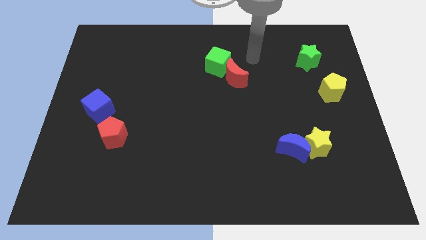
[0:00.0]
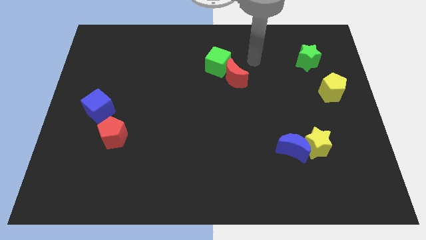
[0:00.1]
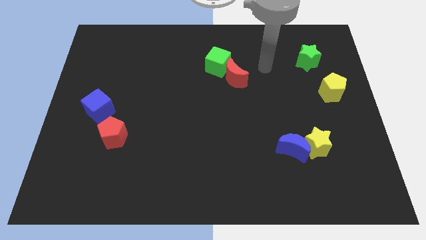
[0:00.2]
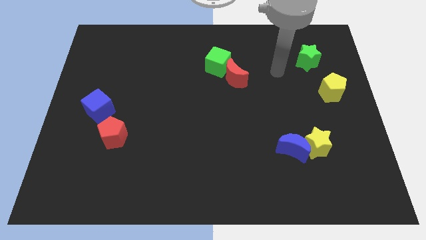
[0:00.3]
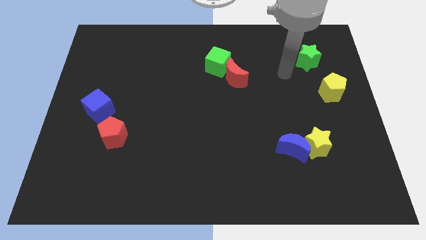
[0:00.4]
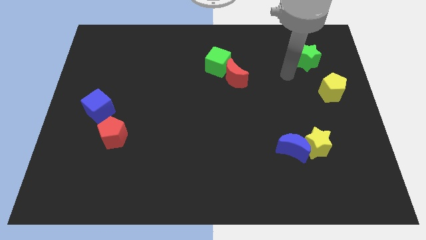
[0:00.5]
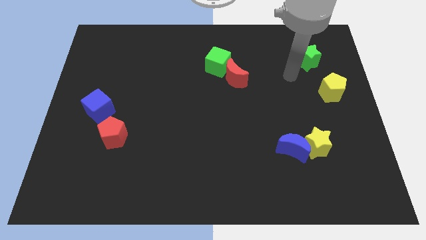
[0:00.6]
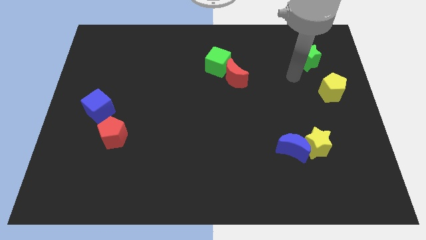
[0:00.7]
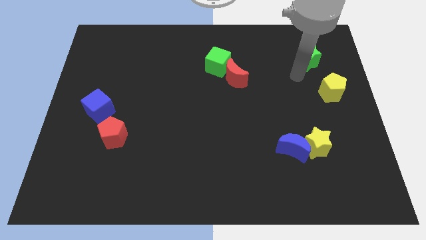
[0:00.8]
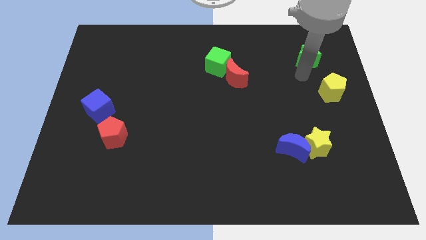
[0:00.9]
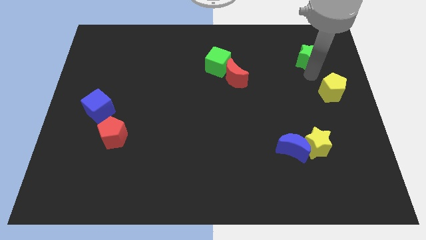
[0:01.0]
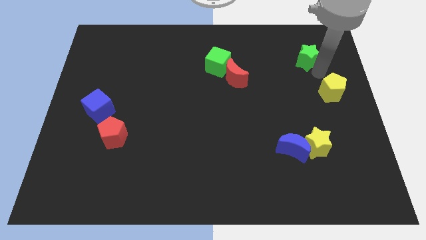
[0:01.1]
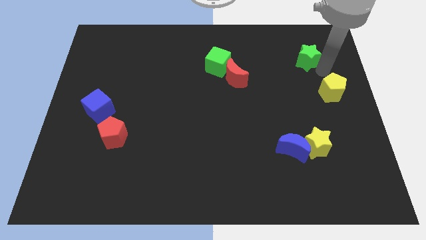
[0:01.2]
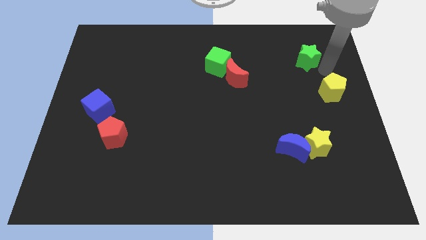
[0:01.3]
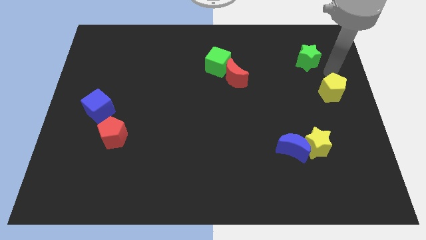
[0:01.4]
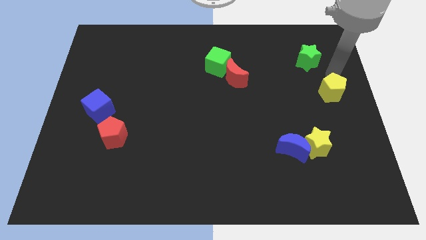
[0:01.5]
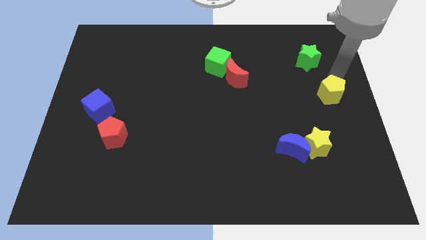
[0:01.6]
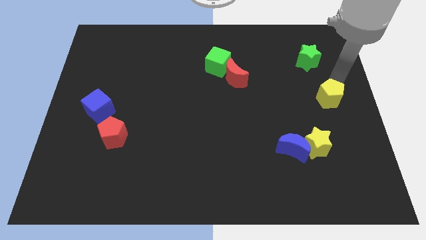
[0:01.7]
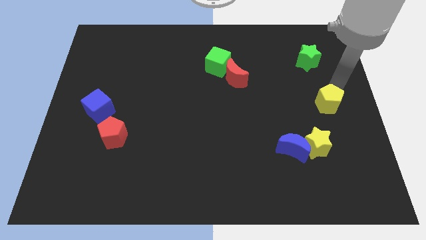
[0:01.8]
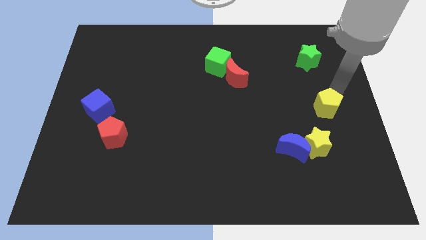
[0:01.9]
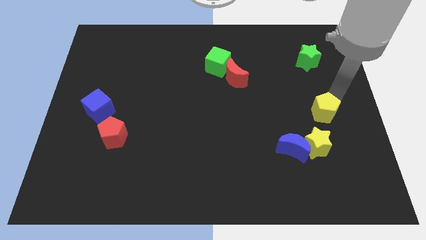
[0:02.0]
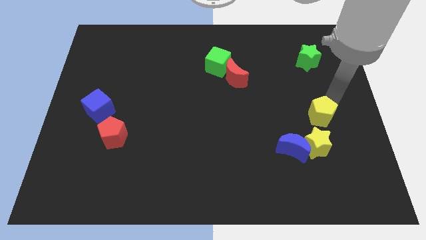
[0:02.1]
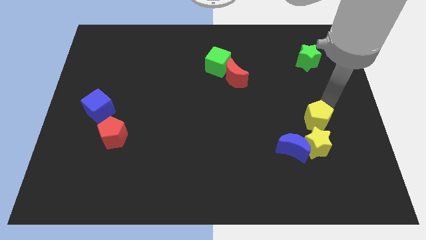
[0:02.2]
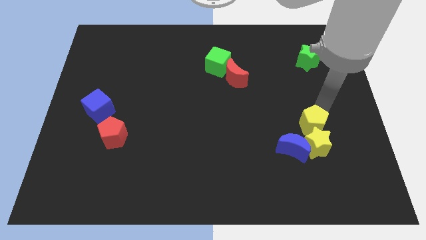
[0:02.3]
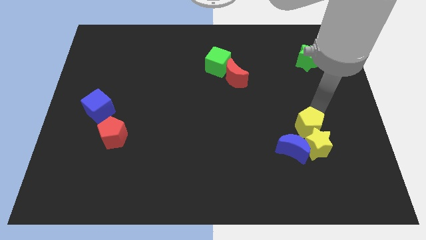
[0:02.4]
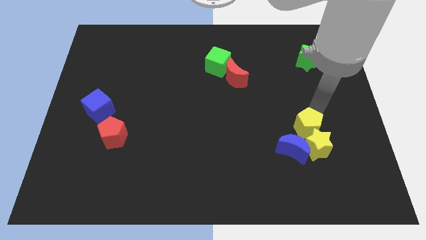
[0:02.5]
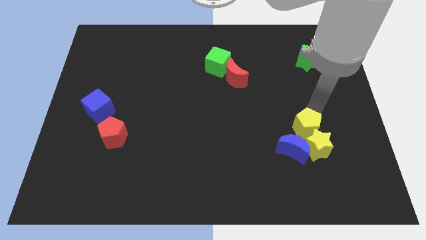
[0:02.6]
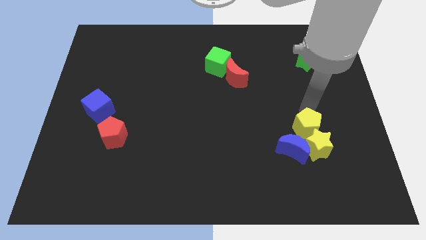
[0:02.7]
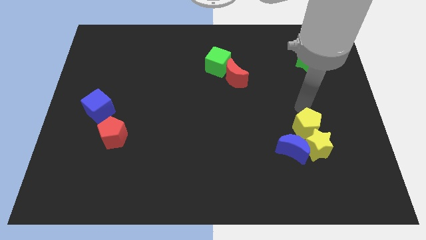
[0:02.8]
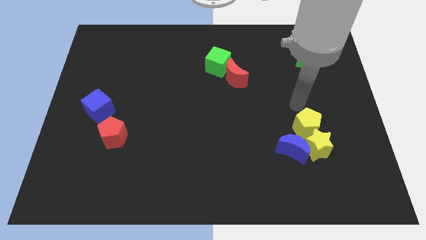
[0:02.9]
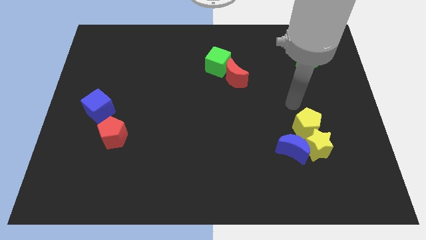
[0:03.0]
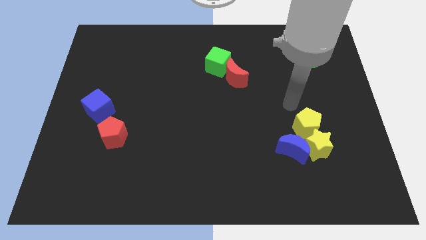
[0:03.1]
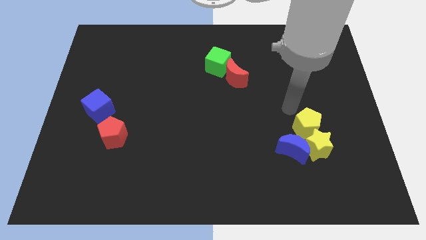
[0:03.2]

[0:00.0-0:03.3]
move yellow pentagon into yellow star

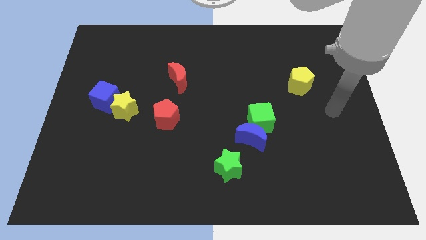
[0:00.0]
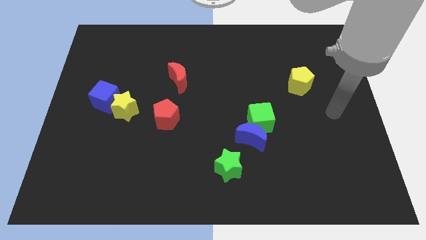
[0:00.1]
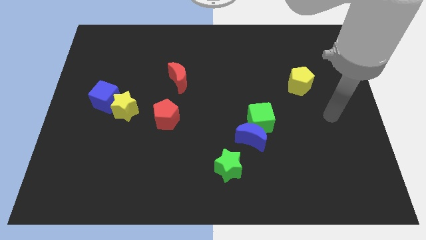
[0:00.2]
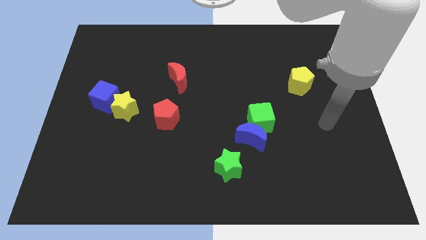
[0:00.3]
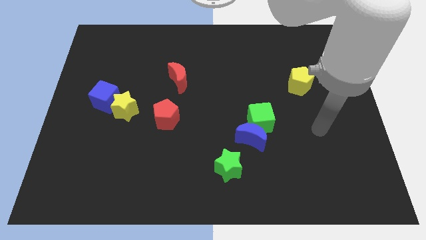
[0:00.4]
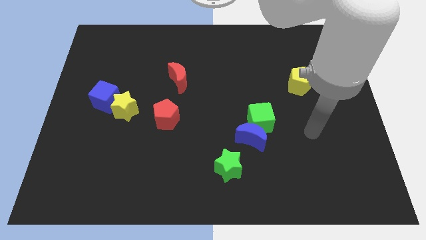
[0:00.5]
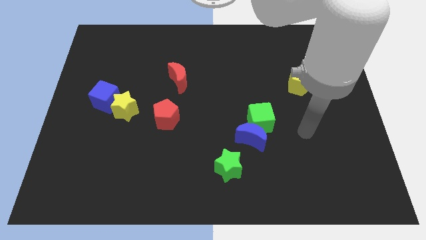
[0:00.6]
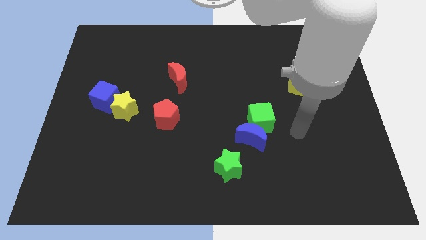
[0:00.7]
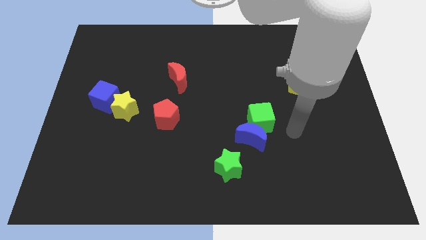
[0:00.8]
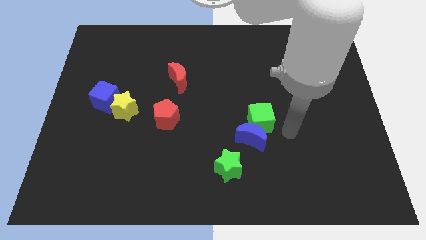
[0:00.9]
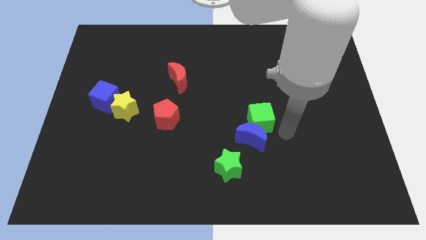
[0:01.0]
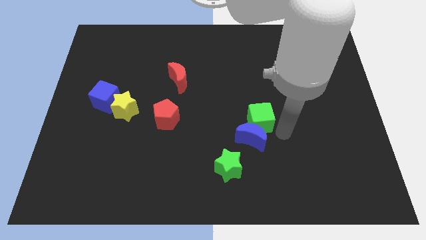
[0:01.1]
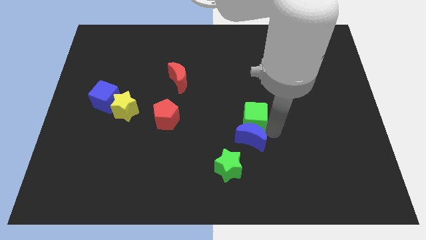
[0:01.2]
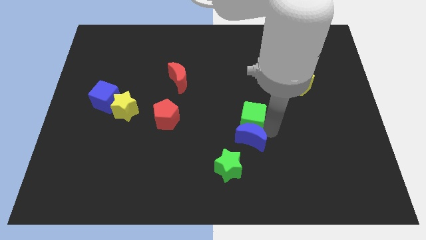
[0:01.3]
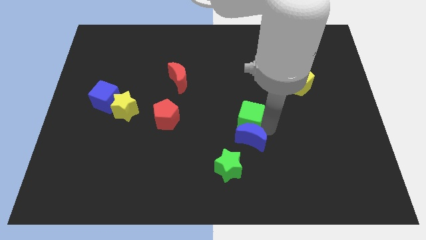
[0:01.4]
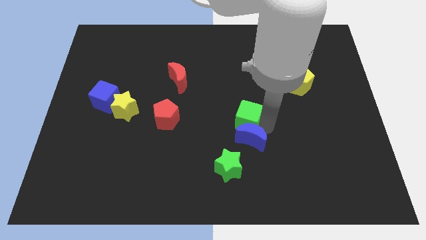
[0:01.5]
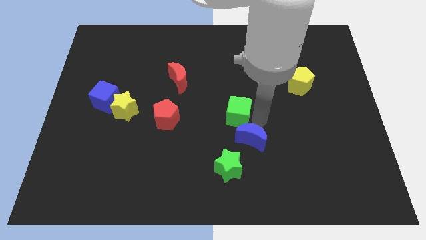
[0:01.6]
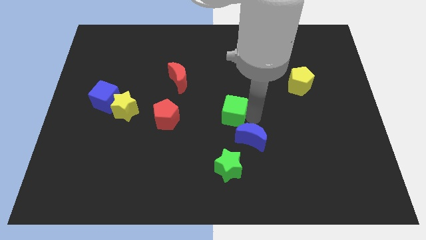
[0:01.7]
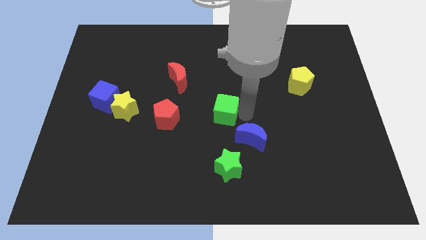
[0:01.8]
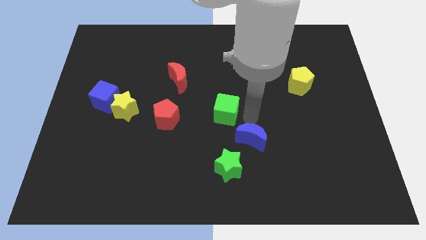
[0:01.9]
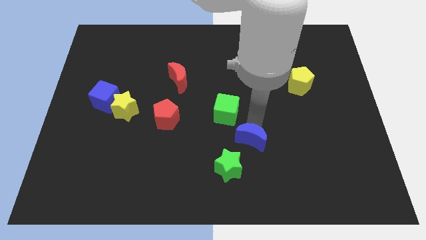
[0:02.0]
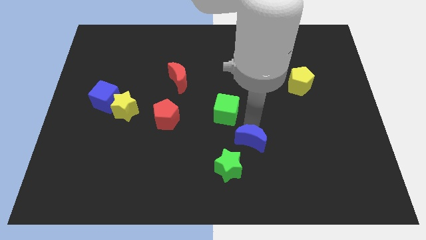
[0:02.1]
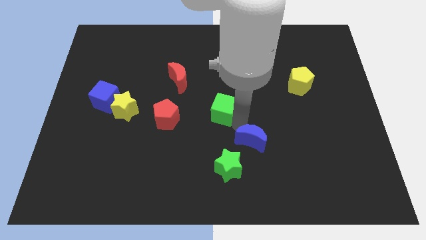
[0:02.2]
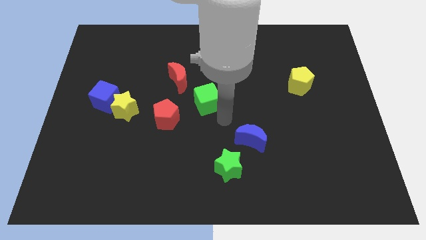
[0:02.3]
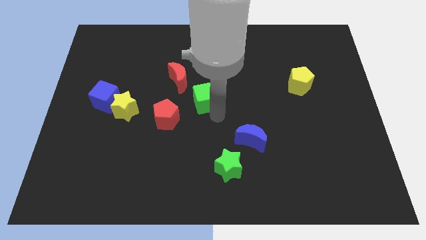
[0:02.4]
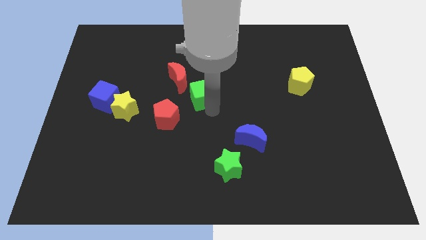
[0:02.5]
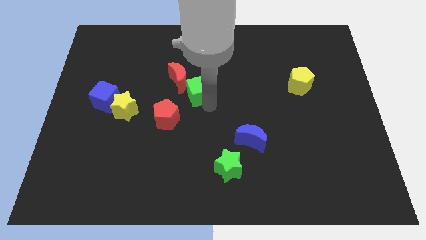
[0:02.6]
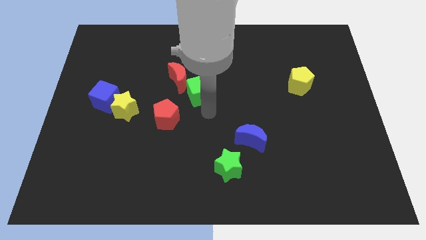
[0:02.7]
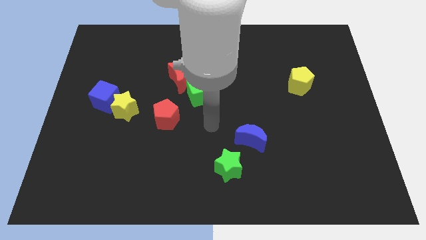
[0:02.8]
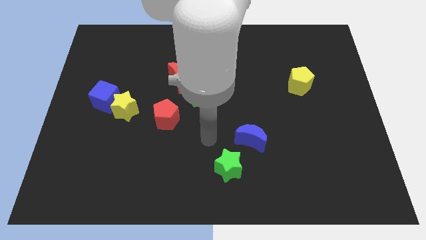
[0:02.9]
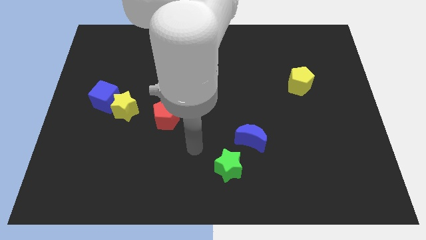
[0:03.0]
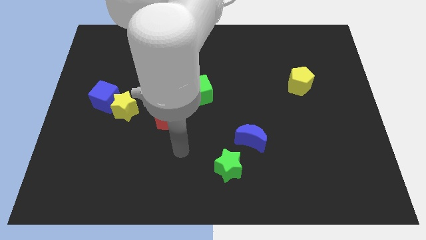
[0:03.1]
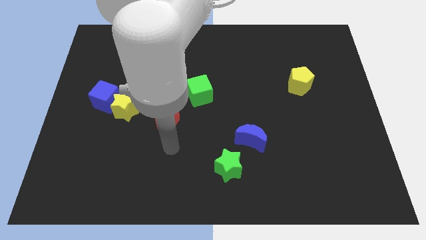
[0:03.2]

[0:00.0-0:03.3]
move the green cube to the right of the red moon

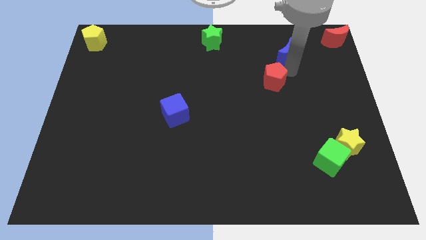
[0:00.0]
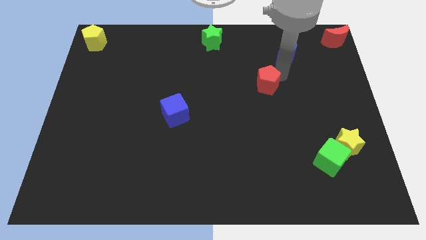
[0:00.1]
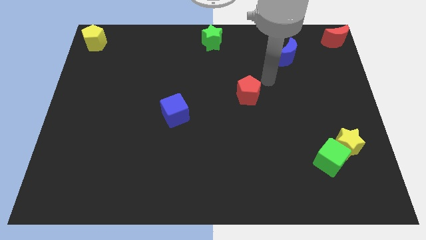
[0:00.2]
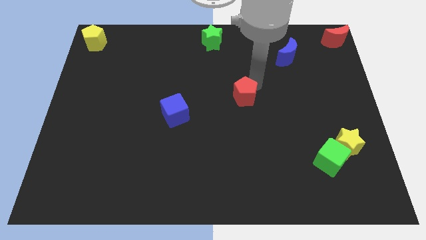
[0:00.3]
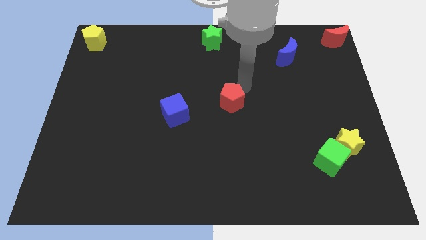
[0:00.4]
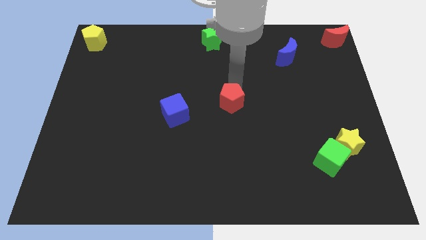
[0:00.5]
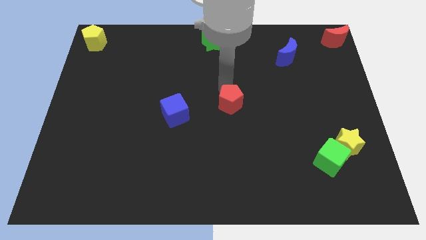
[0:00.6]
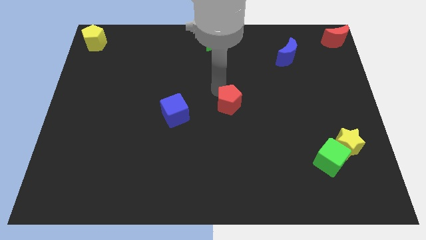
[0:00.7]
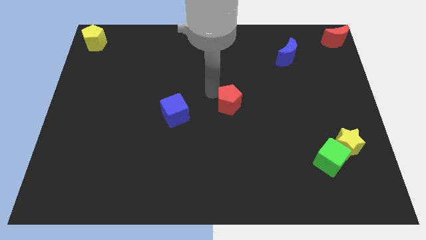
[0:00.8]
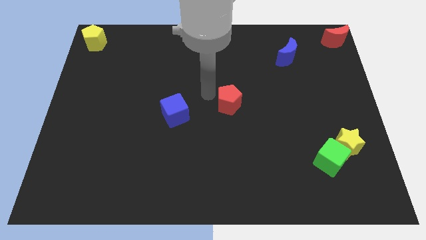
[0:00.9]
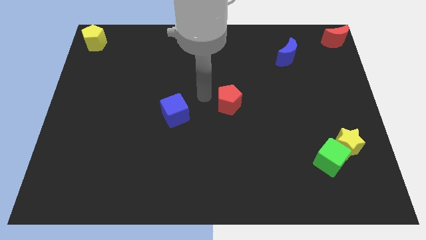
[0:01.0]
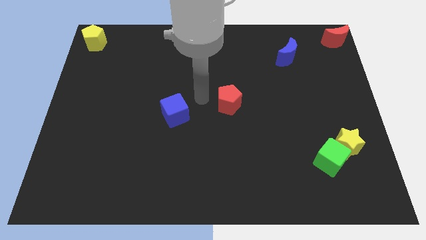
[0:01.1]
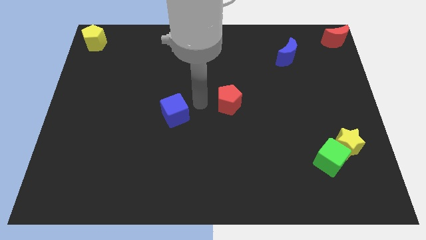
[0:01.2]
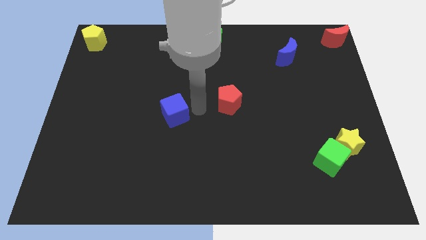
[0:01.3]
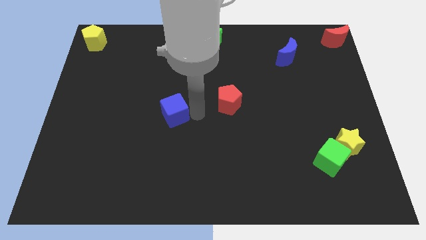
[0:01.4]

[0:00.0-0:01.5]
place red pentagon to the center of the board

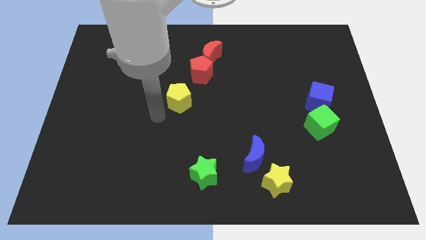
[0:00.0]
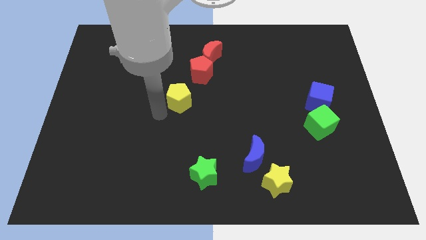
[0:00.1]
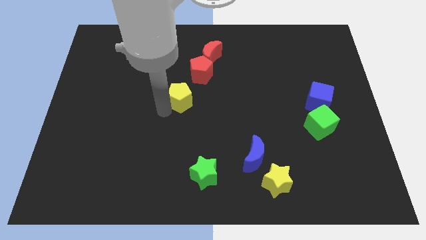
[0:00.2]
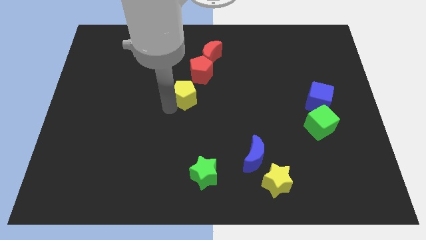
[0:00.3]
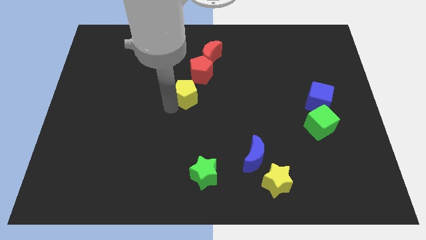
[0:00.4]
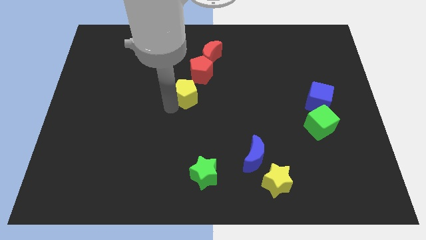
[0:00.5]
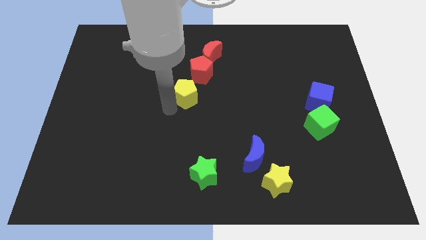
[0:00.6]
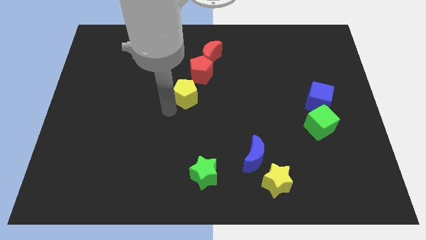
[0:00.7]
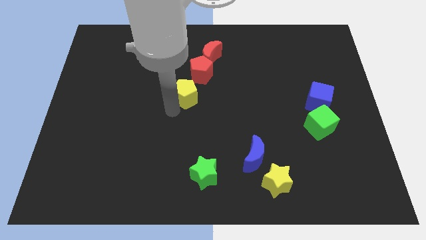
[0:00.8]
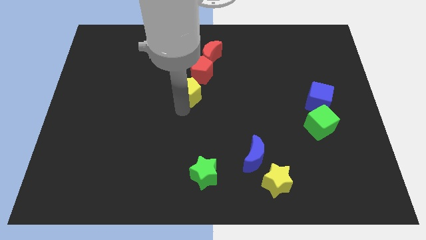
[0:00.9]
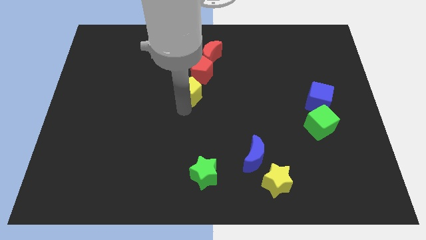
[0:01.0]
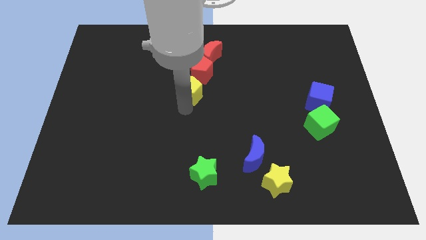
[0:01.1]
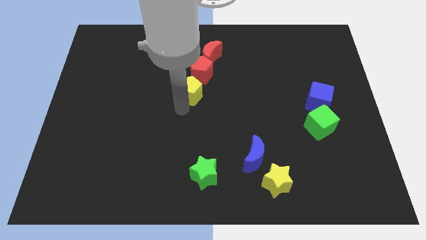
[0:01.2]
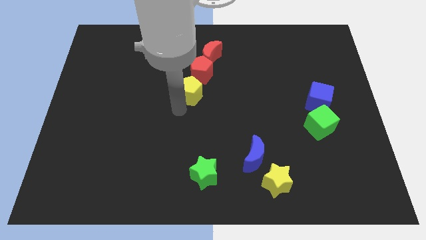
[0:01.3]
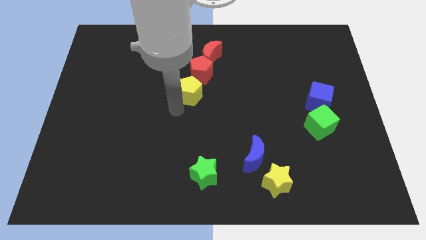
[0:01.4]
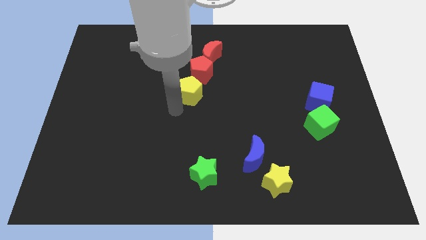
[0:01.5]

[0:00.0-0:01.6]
place the yellow pentagon below the red pentagon
